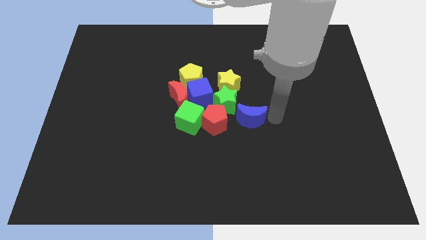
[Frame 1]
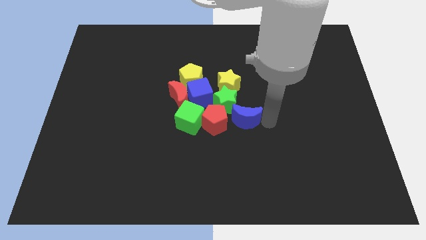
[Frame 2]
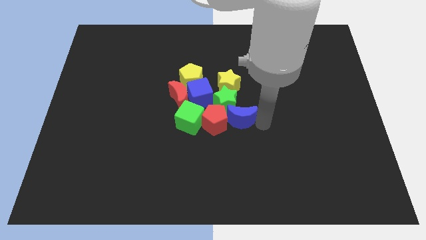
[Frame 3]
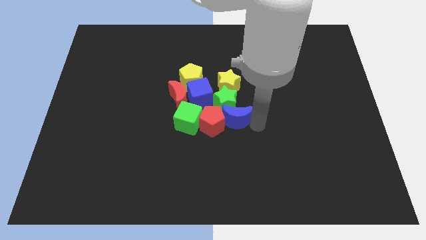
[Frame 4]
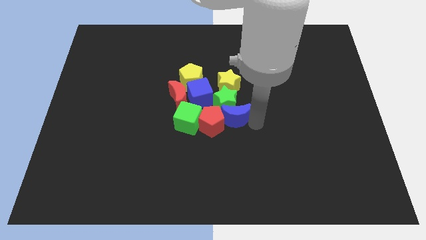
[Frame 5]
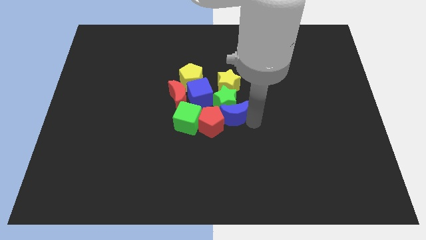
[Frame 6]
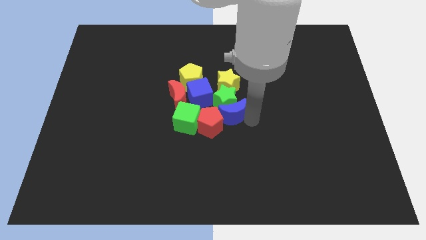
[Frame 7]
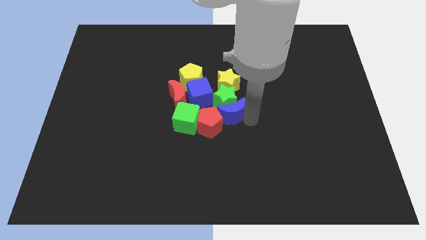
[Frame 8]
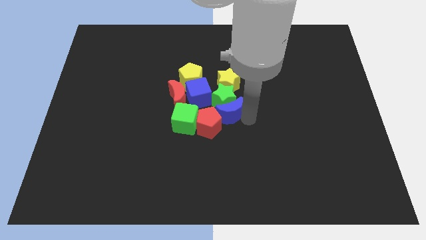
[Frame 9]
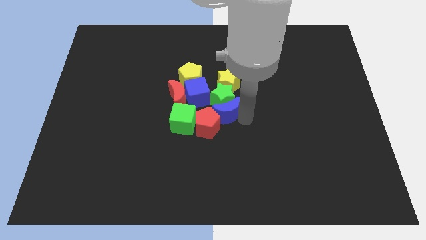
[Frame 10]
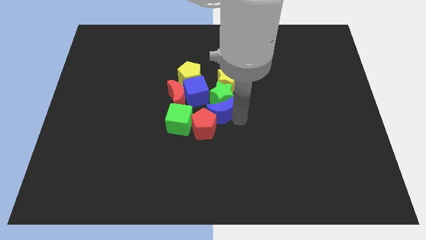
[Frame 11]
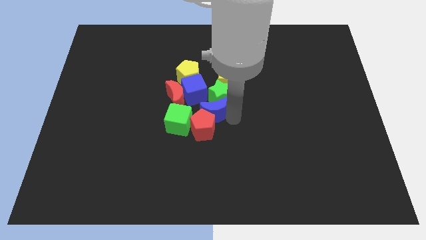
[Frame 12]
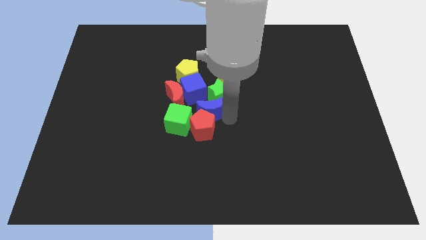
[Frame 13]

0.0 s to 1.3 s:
push the blue moon into the group of blocks

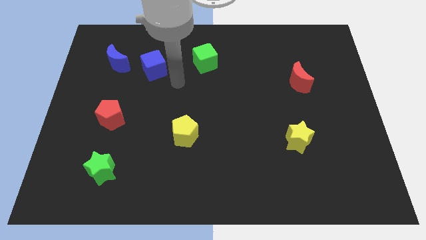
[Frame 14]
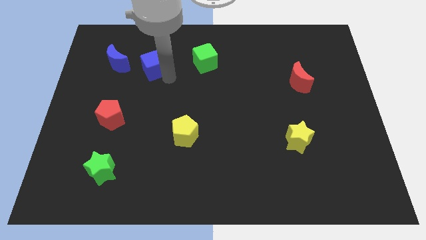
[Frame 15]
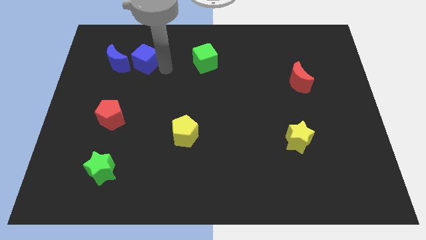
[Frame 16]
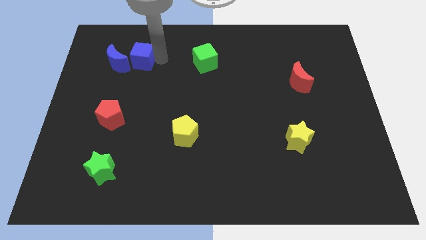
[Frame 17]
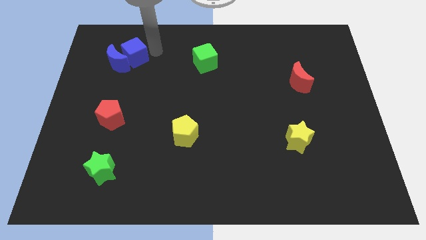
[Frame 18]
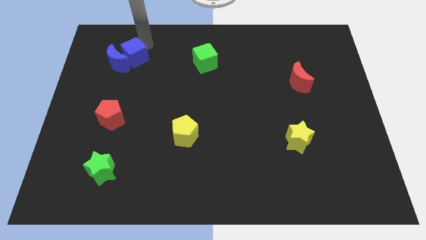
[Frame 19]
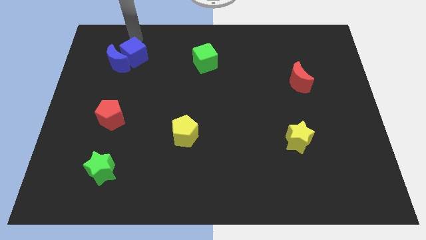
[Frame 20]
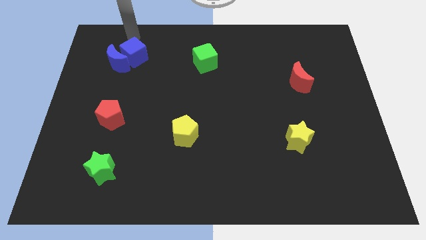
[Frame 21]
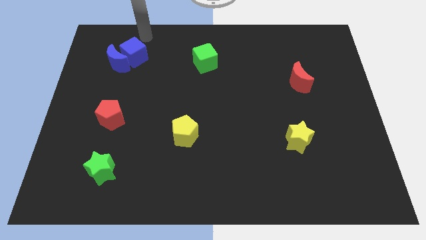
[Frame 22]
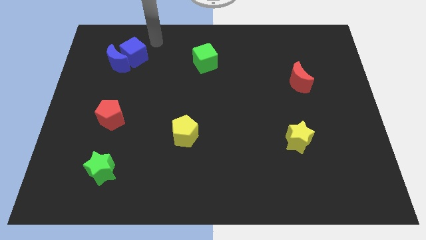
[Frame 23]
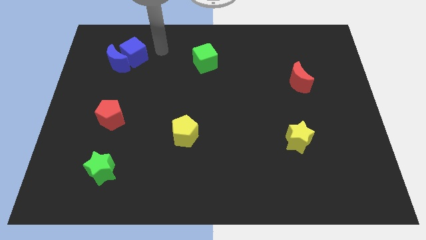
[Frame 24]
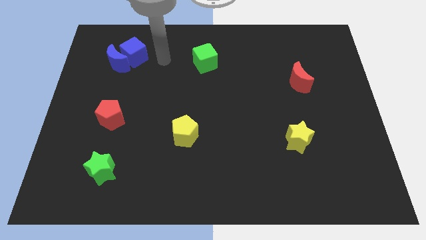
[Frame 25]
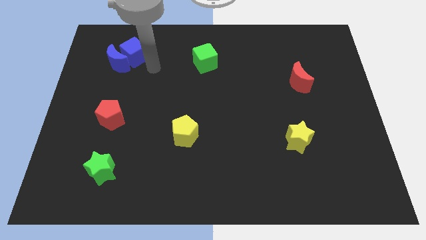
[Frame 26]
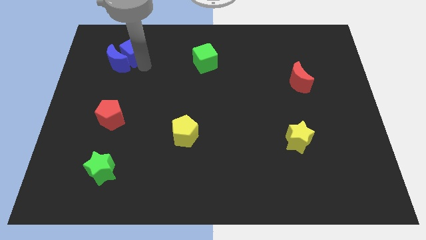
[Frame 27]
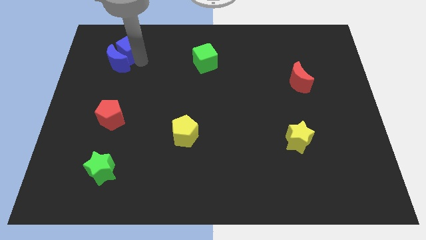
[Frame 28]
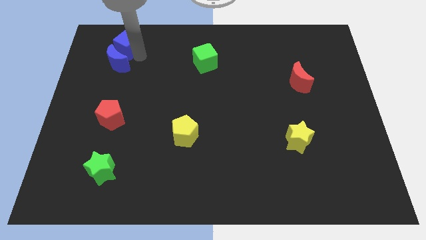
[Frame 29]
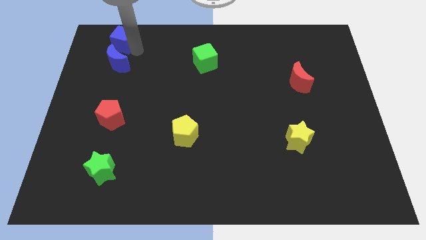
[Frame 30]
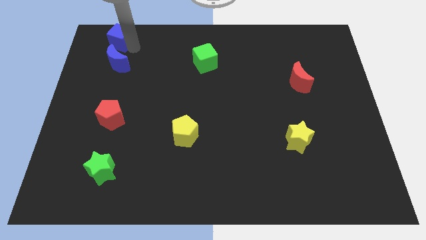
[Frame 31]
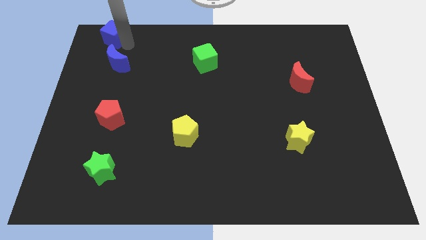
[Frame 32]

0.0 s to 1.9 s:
place the blue cube vertically above the blue moon

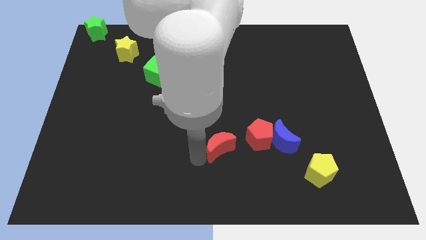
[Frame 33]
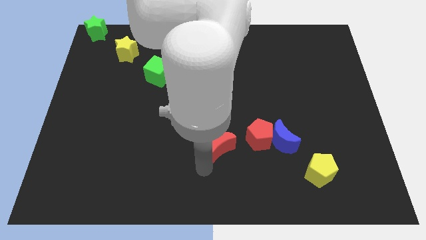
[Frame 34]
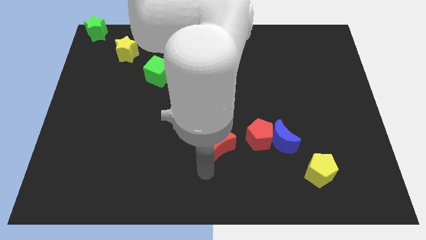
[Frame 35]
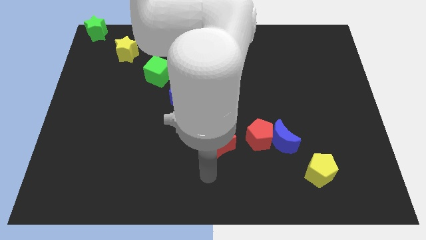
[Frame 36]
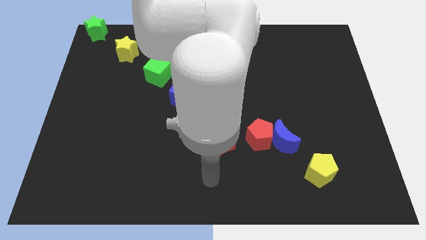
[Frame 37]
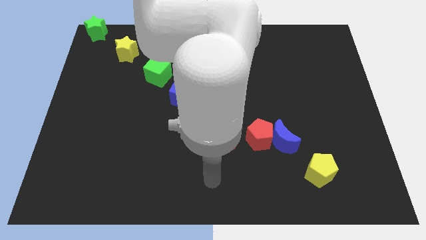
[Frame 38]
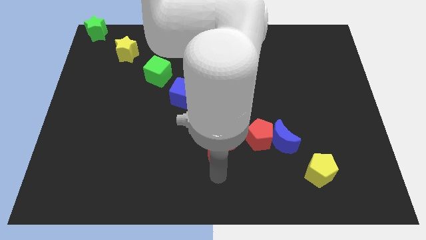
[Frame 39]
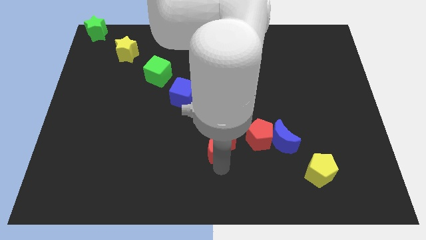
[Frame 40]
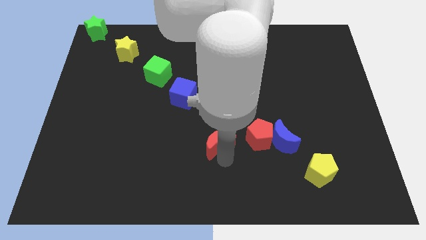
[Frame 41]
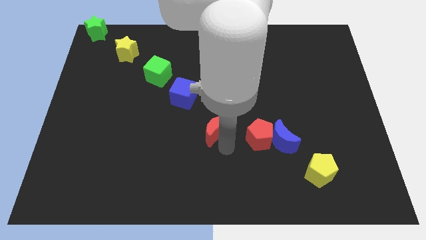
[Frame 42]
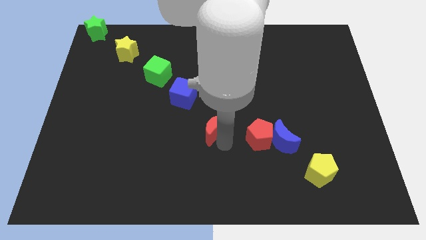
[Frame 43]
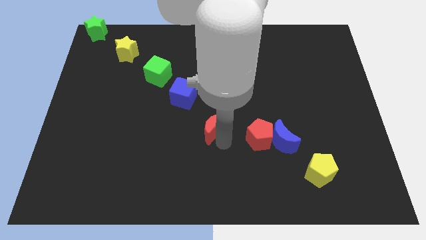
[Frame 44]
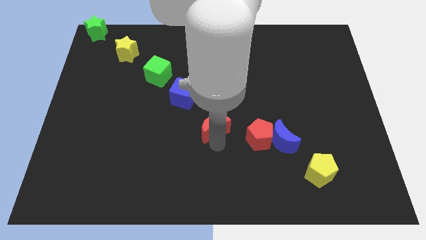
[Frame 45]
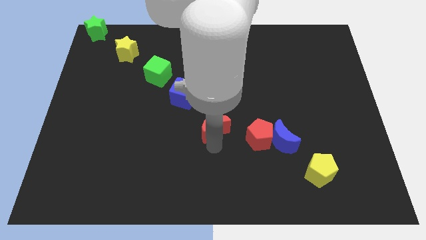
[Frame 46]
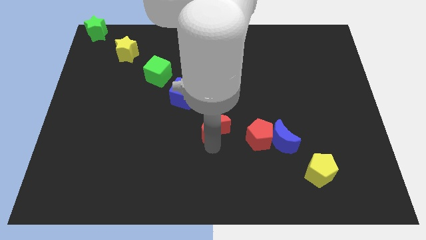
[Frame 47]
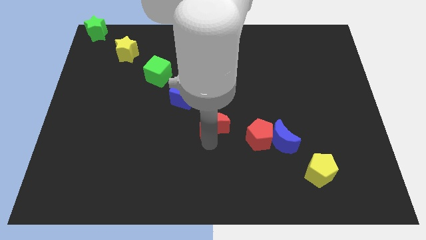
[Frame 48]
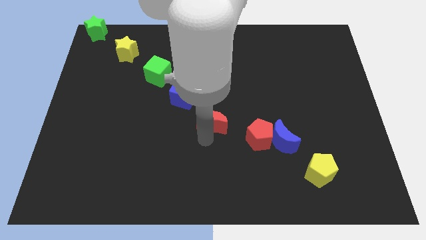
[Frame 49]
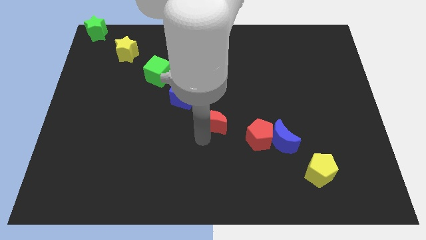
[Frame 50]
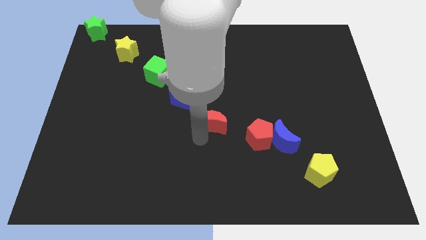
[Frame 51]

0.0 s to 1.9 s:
push the red crescent to the top left side of the red pentagon

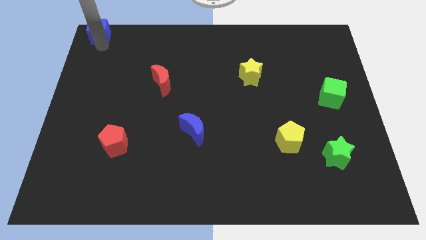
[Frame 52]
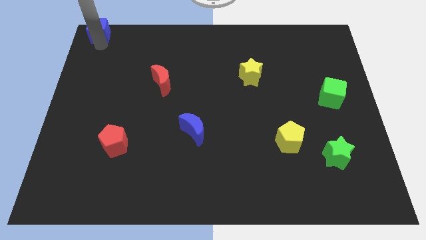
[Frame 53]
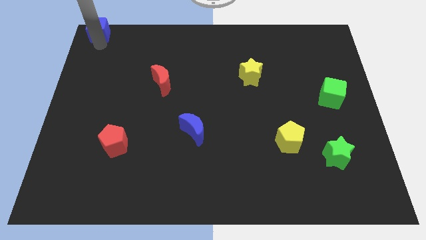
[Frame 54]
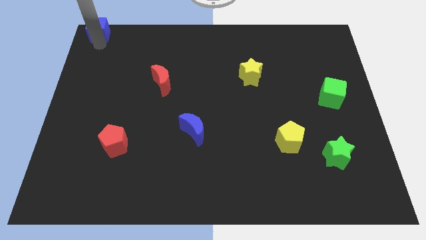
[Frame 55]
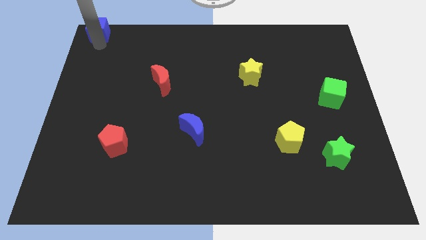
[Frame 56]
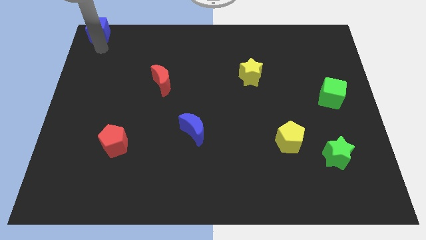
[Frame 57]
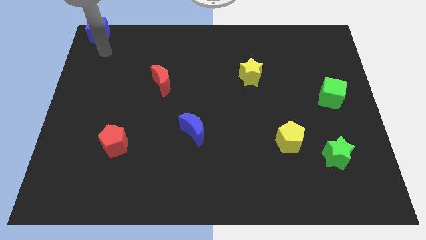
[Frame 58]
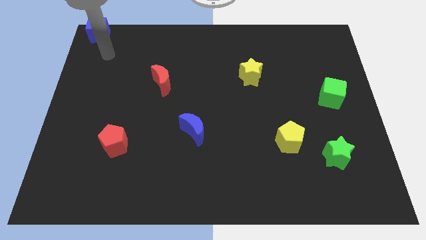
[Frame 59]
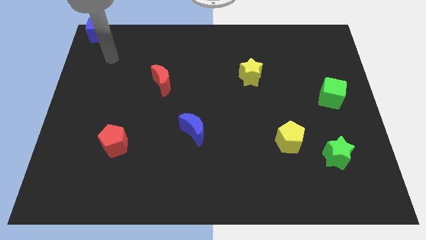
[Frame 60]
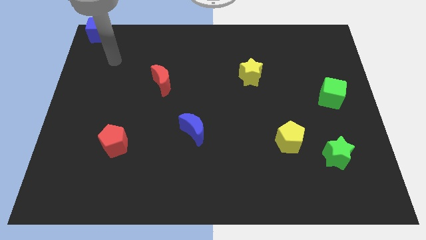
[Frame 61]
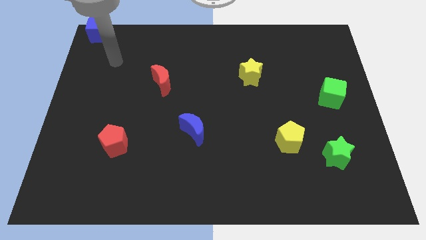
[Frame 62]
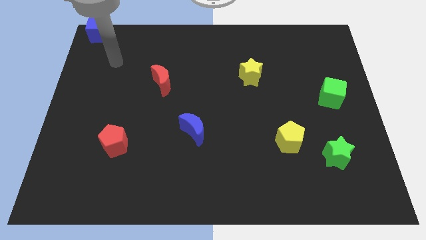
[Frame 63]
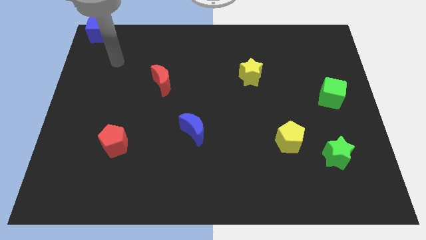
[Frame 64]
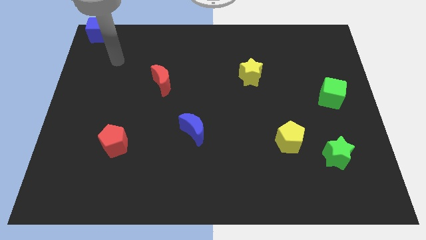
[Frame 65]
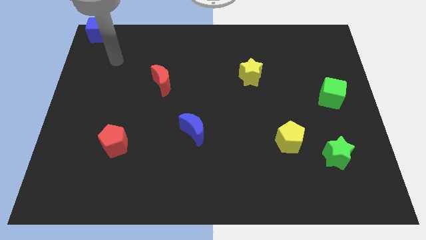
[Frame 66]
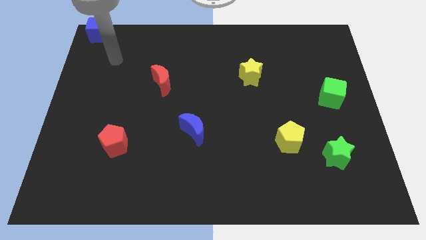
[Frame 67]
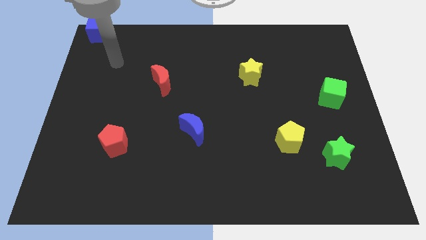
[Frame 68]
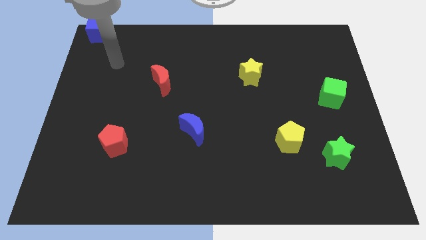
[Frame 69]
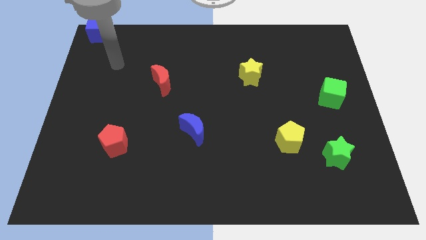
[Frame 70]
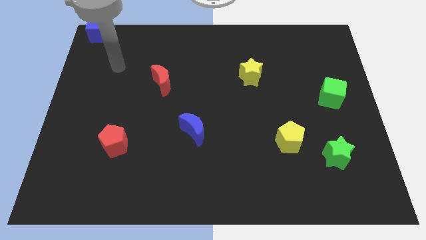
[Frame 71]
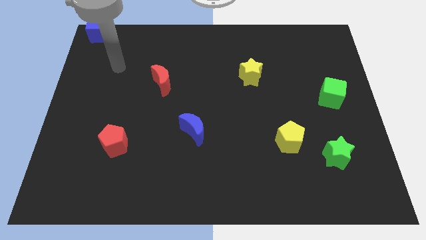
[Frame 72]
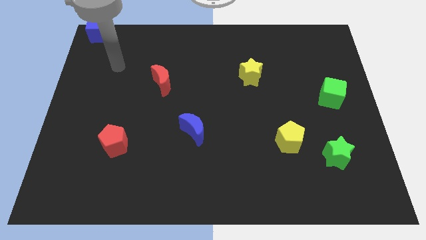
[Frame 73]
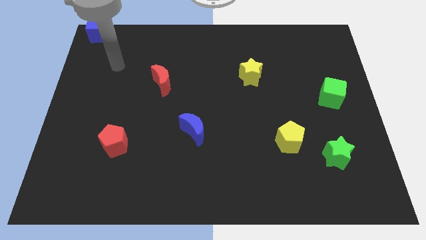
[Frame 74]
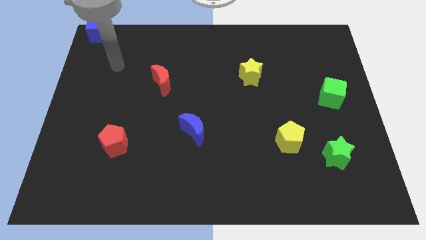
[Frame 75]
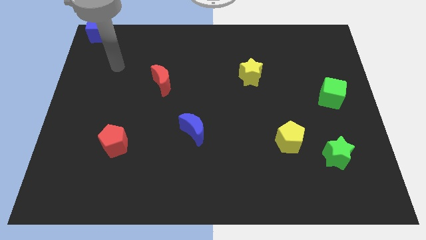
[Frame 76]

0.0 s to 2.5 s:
point the arm above the red pentagon

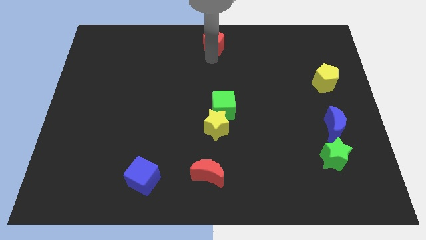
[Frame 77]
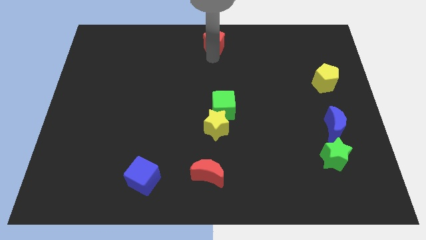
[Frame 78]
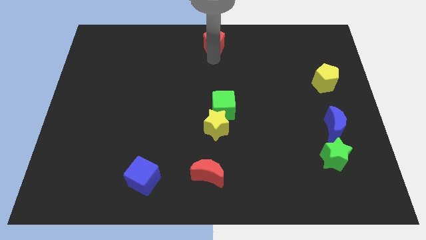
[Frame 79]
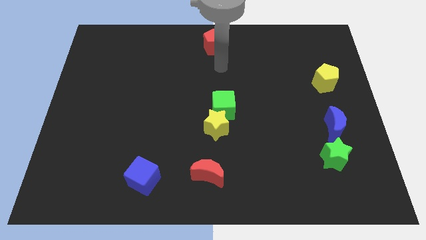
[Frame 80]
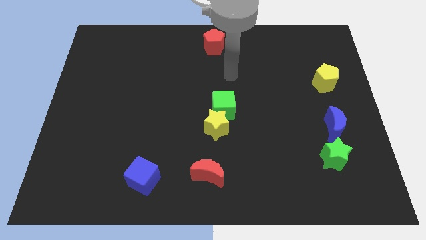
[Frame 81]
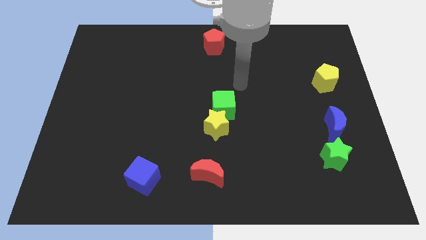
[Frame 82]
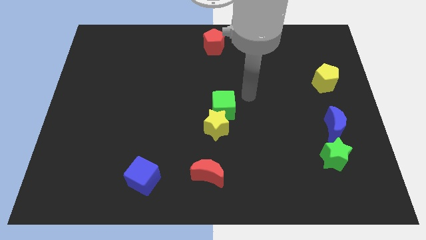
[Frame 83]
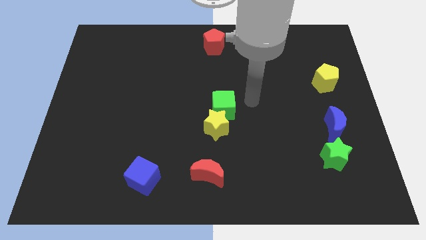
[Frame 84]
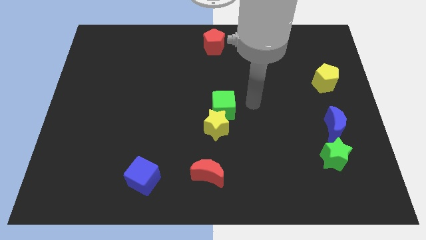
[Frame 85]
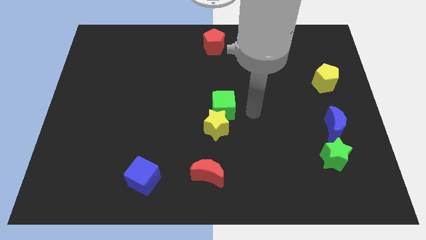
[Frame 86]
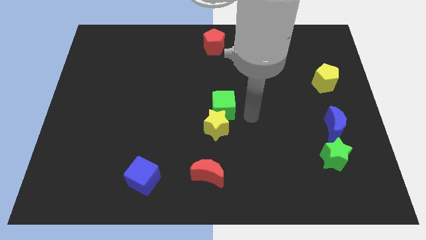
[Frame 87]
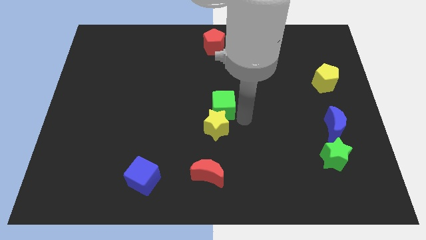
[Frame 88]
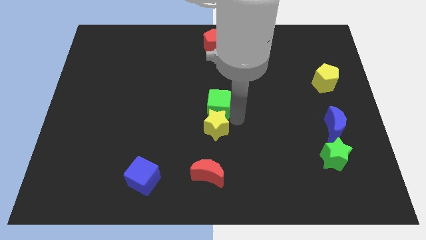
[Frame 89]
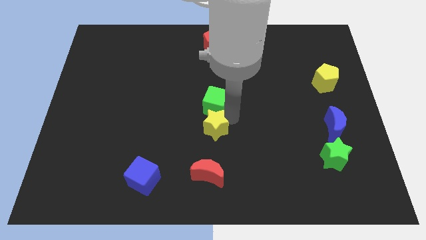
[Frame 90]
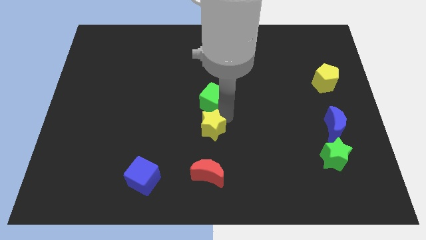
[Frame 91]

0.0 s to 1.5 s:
place your hand below the green cube

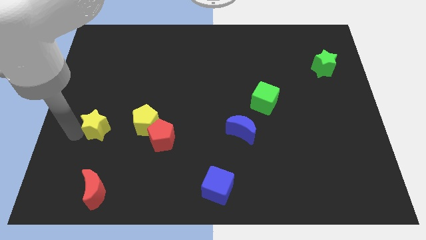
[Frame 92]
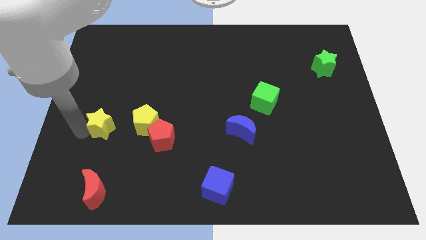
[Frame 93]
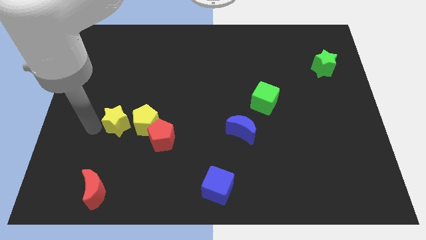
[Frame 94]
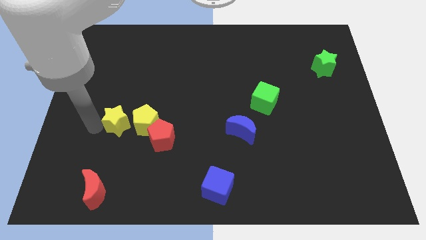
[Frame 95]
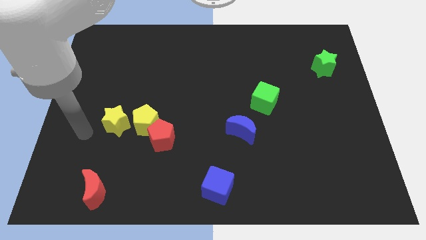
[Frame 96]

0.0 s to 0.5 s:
push the yellow star close to the yellow pentagon
